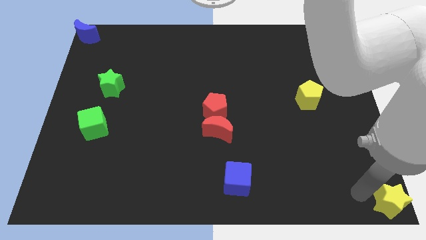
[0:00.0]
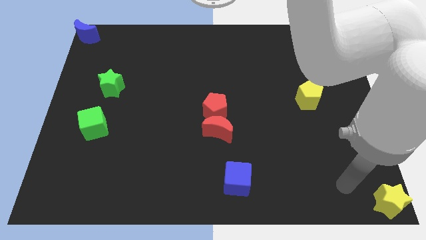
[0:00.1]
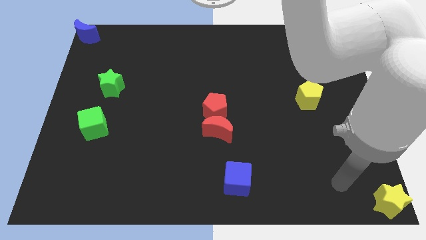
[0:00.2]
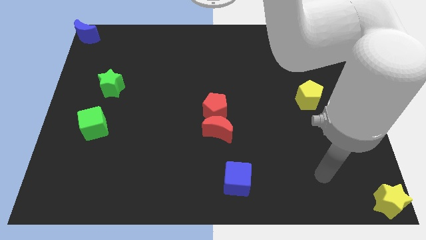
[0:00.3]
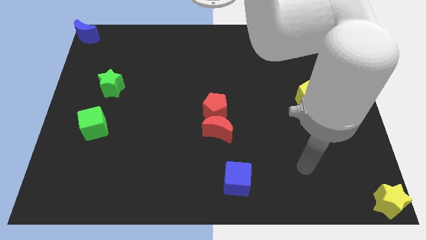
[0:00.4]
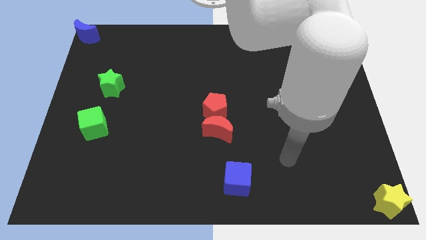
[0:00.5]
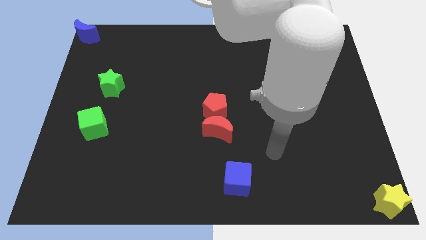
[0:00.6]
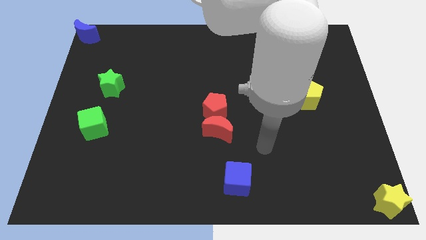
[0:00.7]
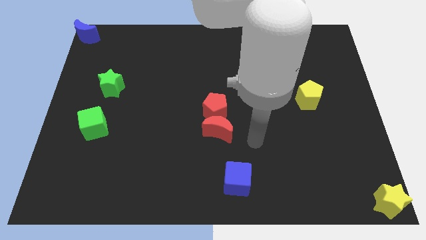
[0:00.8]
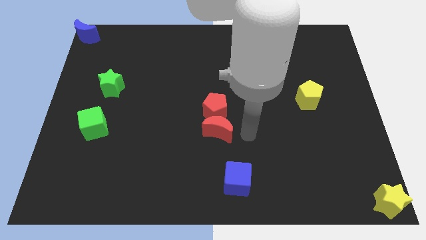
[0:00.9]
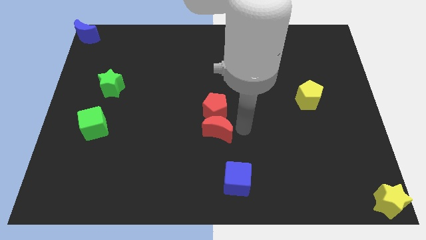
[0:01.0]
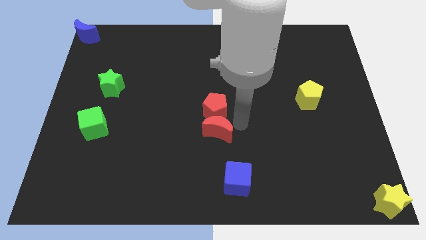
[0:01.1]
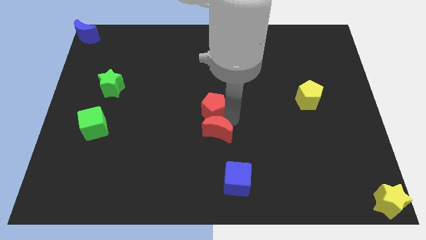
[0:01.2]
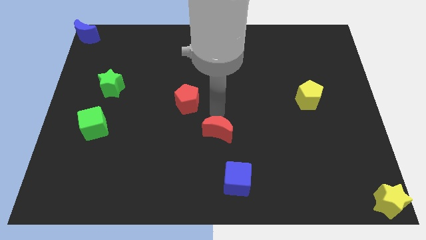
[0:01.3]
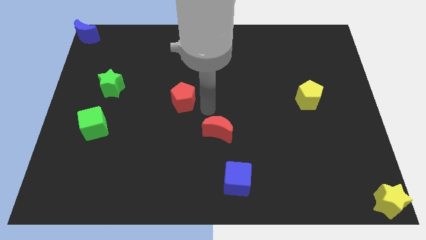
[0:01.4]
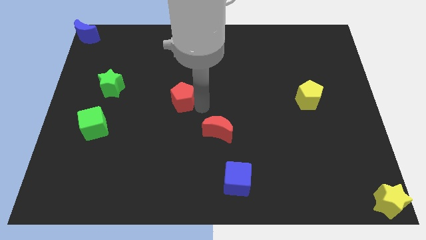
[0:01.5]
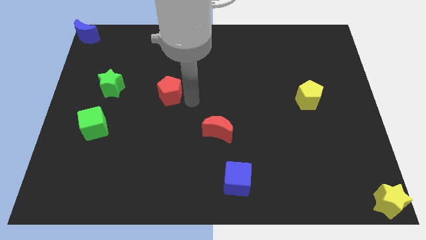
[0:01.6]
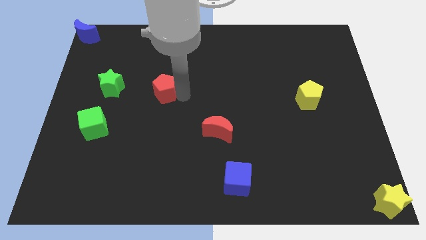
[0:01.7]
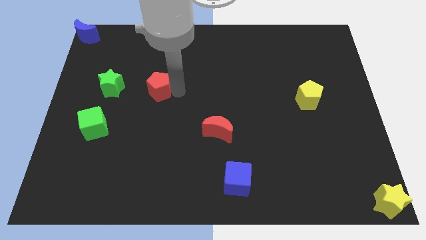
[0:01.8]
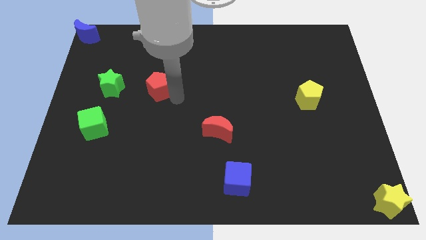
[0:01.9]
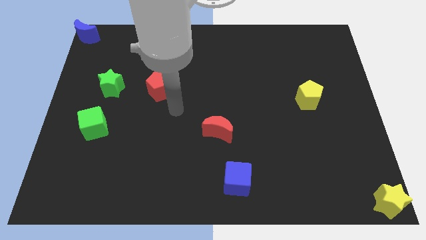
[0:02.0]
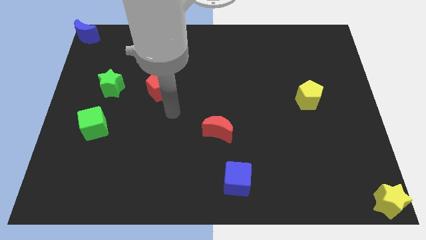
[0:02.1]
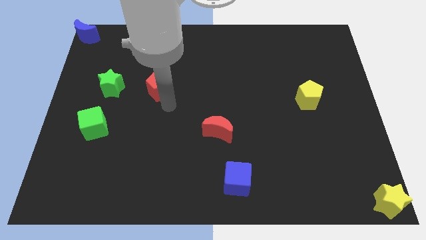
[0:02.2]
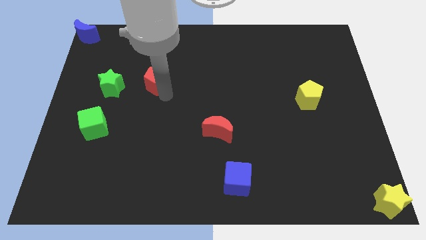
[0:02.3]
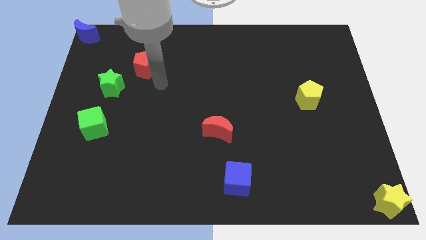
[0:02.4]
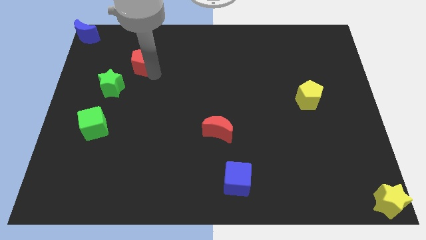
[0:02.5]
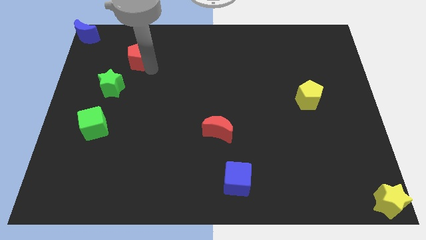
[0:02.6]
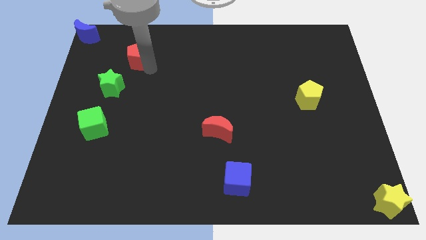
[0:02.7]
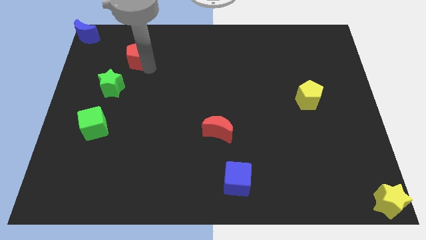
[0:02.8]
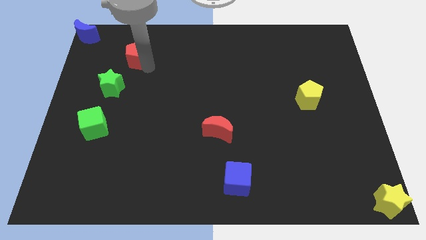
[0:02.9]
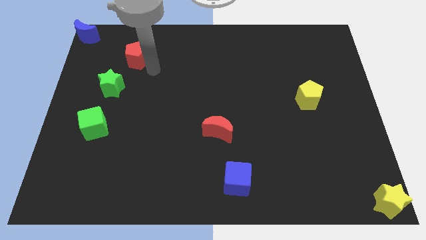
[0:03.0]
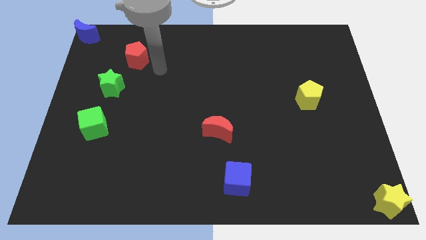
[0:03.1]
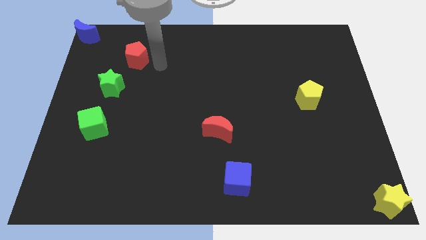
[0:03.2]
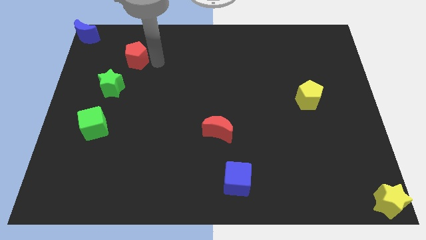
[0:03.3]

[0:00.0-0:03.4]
separate the red pentagon from the red moon

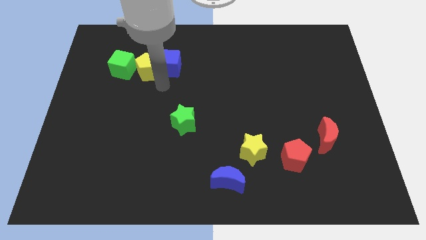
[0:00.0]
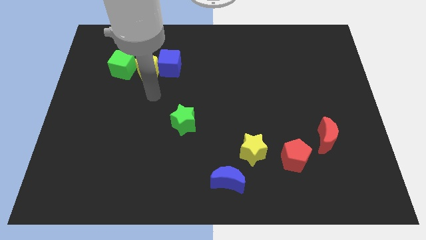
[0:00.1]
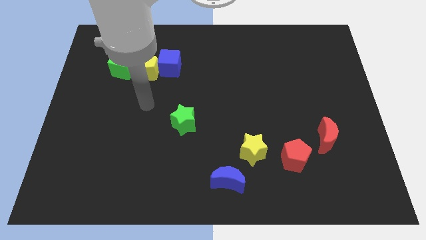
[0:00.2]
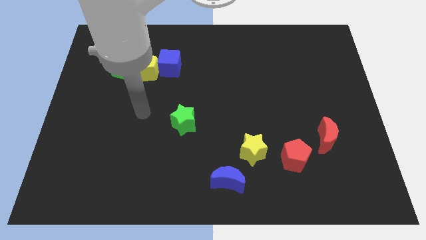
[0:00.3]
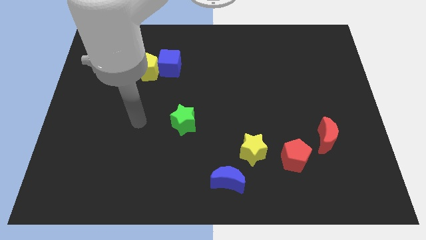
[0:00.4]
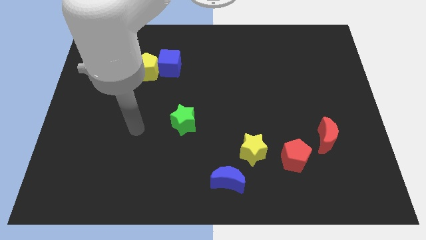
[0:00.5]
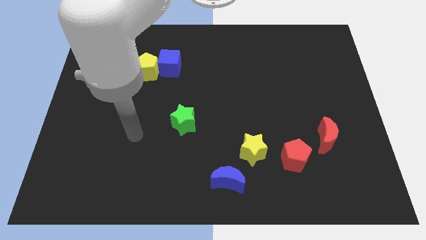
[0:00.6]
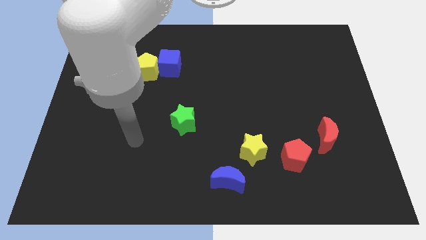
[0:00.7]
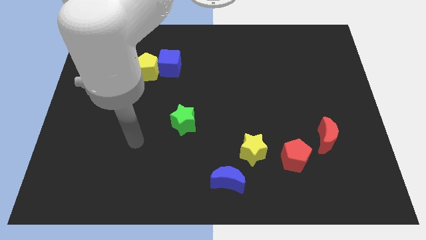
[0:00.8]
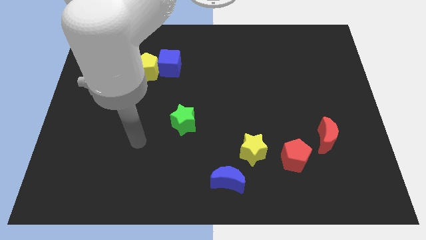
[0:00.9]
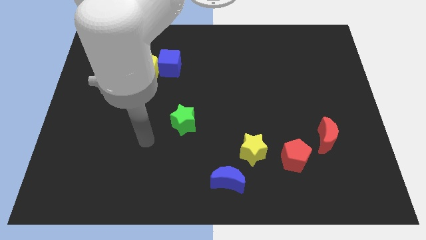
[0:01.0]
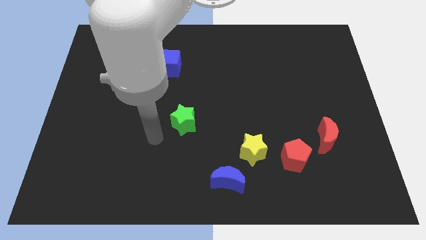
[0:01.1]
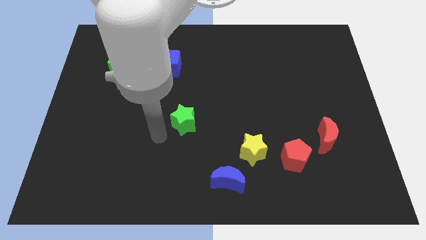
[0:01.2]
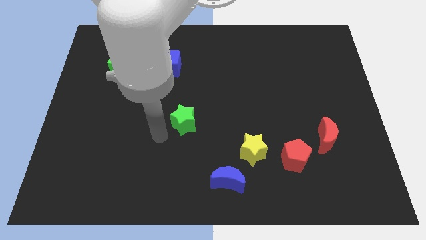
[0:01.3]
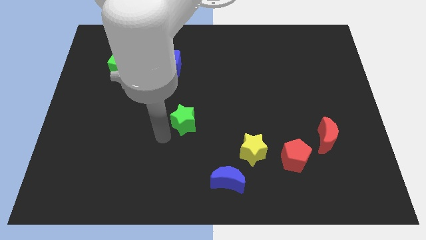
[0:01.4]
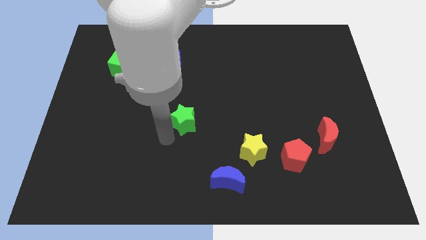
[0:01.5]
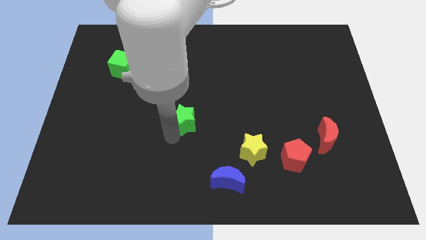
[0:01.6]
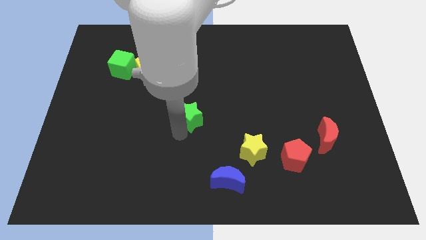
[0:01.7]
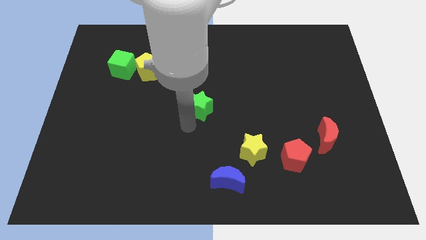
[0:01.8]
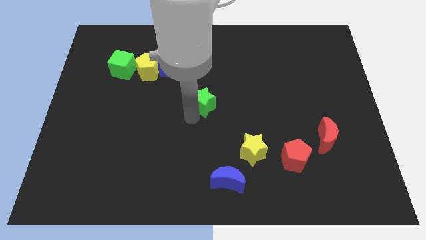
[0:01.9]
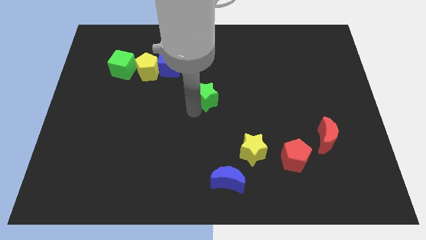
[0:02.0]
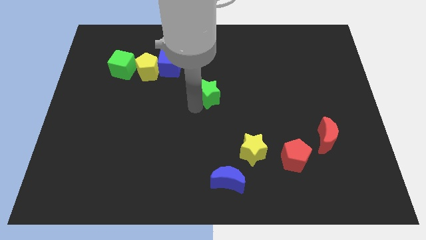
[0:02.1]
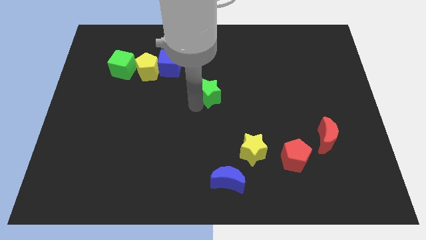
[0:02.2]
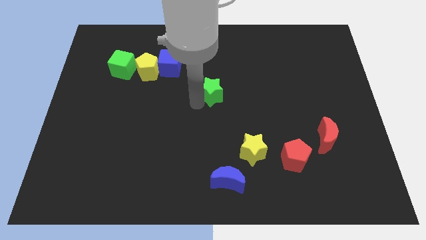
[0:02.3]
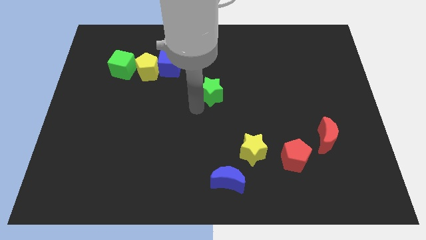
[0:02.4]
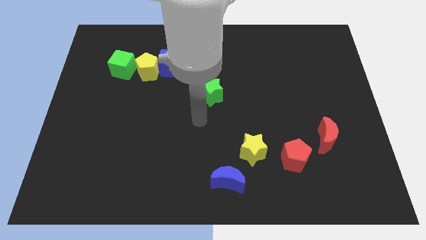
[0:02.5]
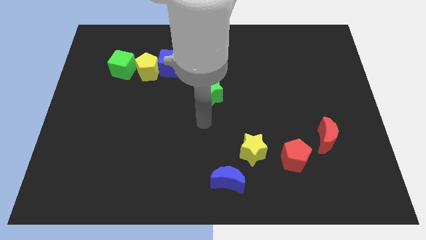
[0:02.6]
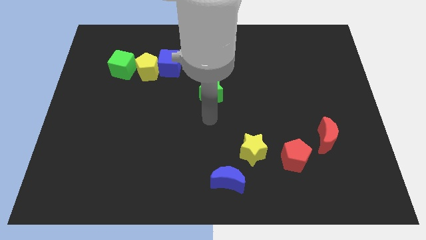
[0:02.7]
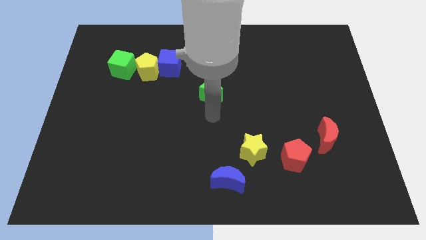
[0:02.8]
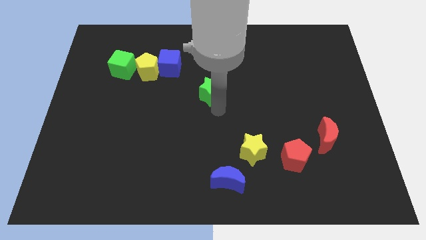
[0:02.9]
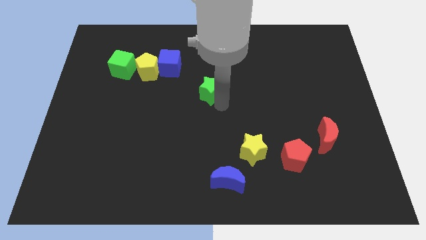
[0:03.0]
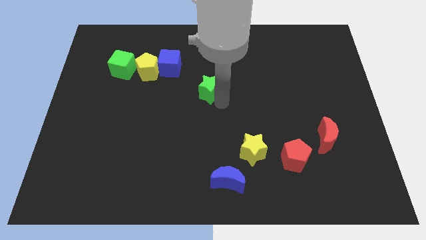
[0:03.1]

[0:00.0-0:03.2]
place the green star vertically above the blue moon

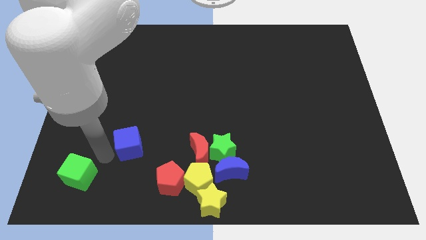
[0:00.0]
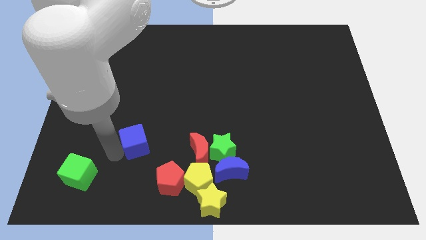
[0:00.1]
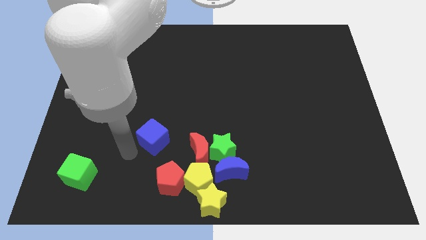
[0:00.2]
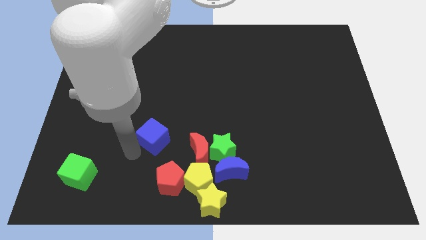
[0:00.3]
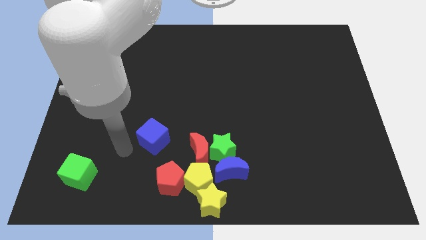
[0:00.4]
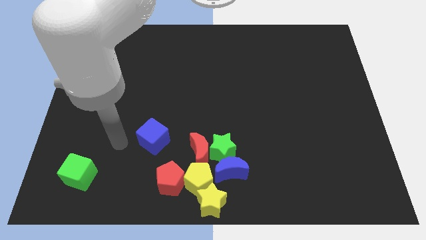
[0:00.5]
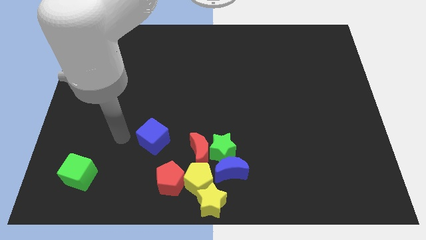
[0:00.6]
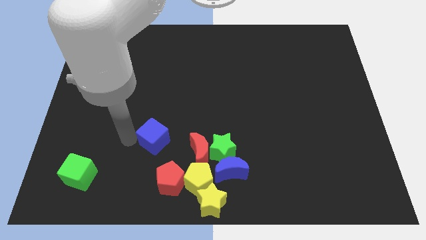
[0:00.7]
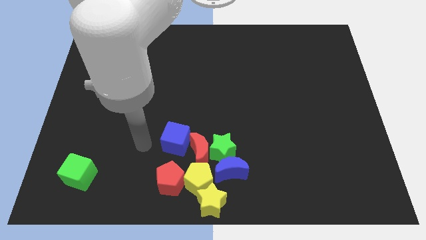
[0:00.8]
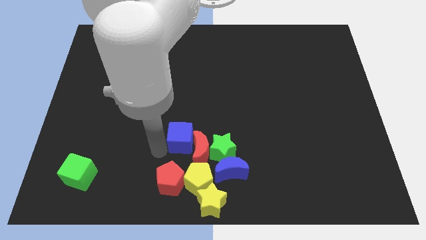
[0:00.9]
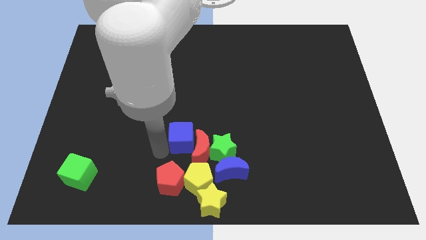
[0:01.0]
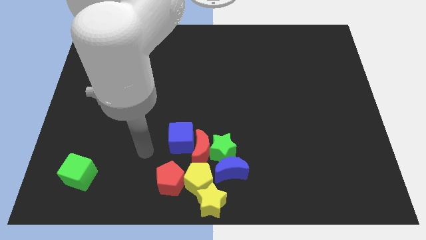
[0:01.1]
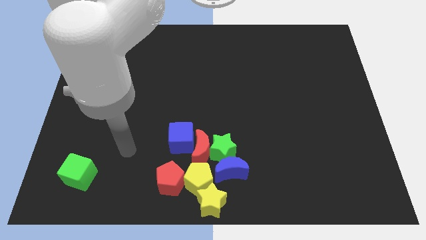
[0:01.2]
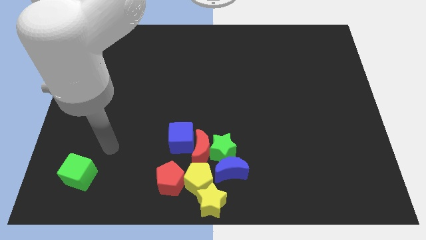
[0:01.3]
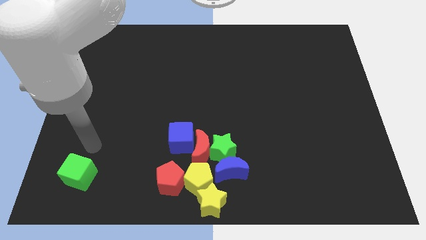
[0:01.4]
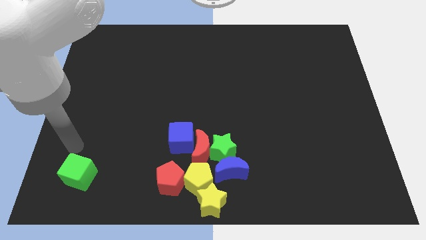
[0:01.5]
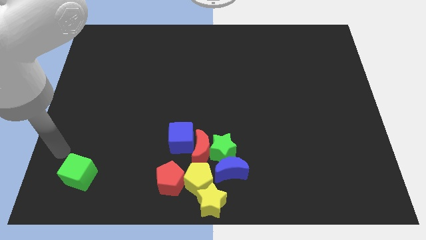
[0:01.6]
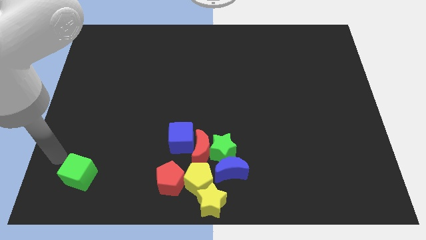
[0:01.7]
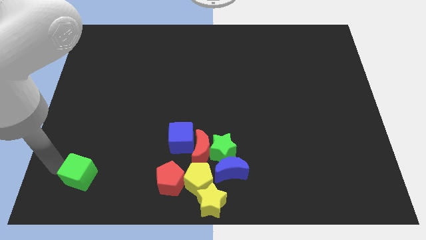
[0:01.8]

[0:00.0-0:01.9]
place the blue cube left to red crescent

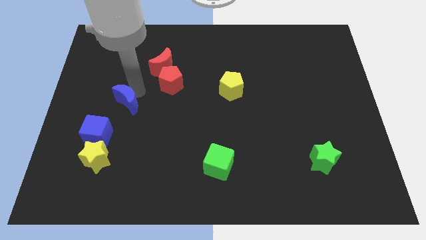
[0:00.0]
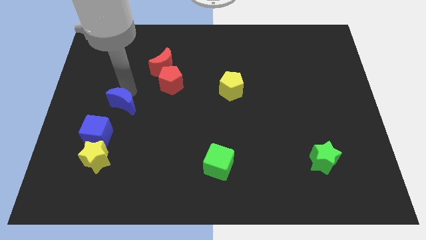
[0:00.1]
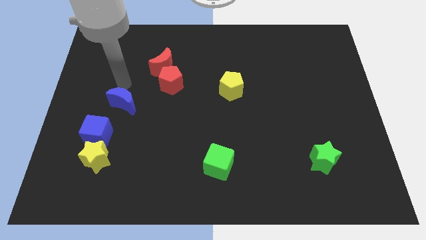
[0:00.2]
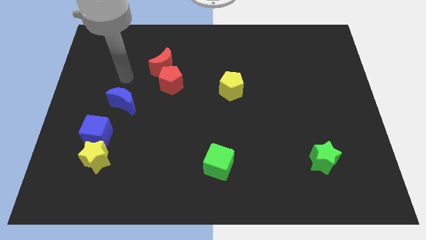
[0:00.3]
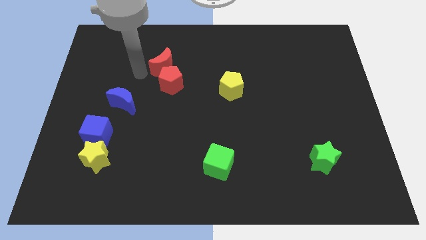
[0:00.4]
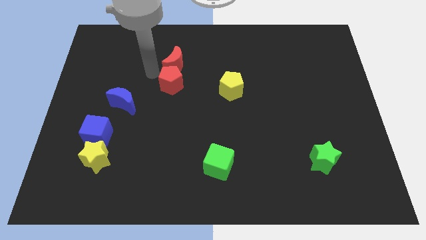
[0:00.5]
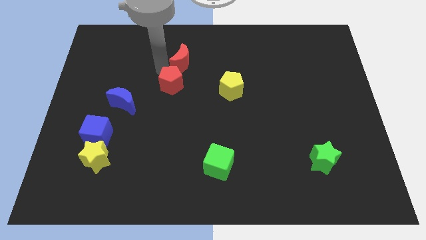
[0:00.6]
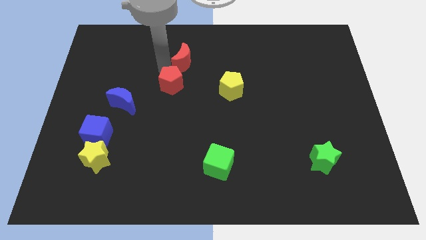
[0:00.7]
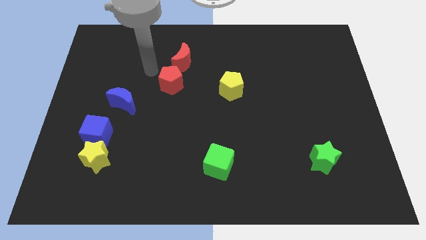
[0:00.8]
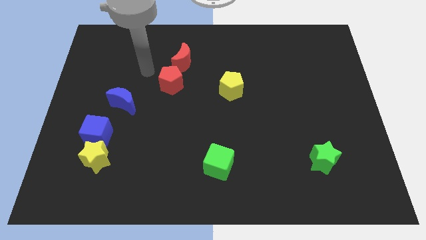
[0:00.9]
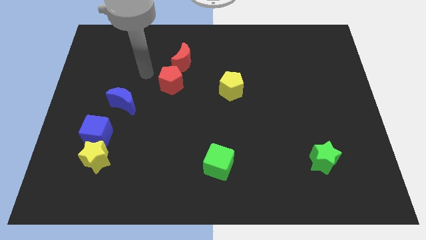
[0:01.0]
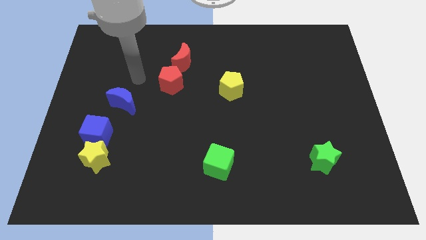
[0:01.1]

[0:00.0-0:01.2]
move the red crescent to the top of the red pentagon
